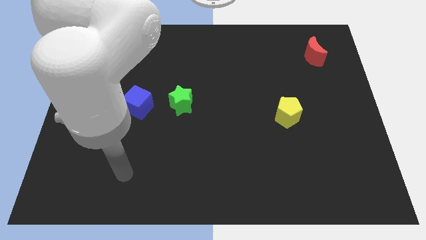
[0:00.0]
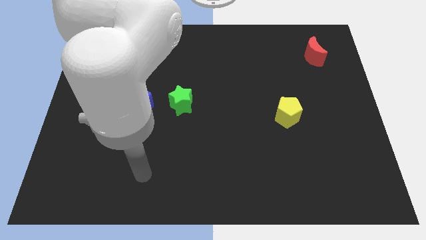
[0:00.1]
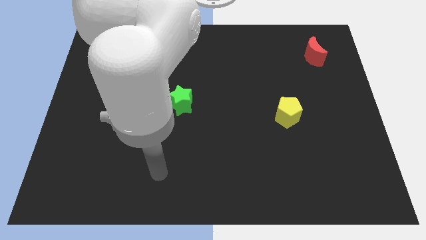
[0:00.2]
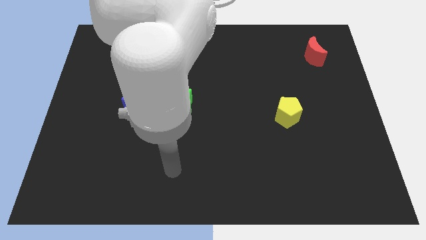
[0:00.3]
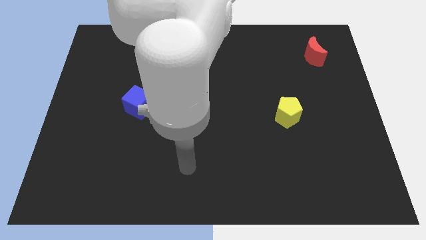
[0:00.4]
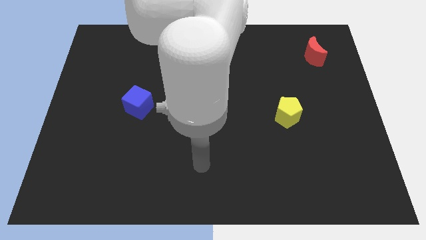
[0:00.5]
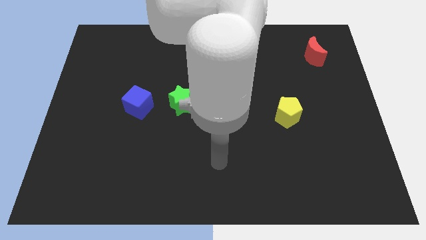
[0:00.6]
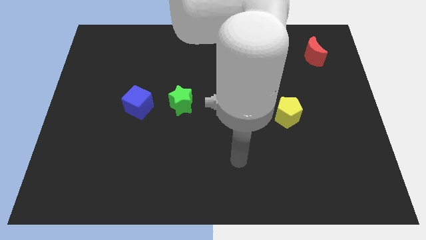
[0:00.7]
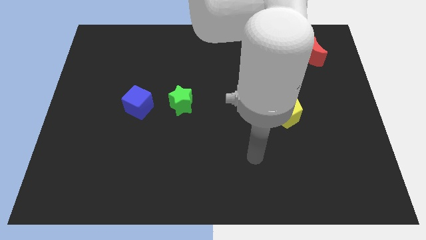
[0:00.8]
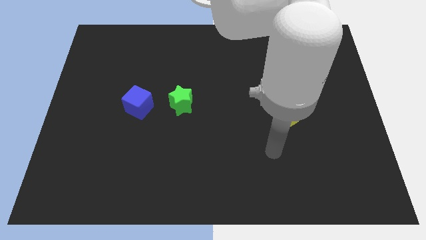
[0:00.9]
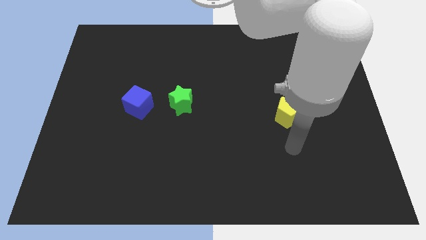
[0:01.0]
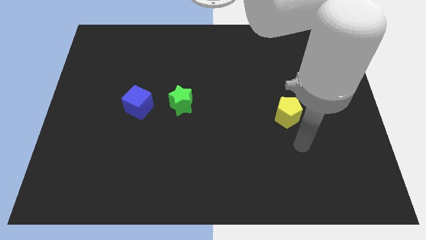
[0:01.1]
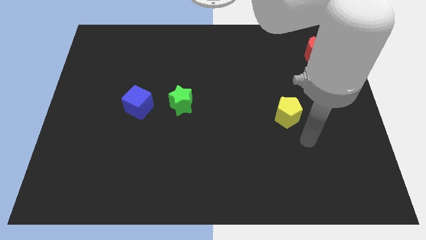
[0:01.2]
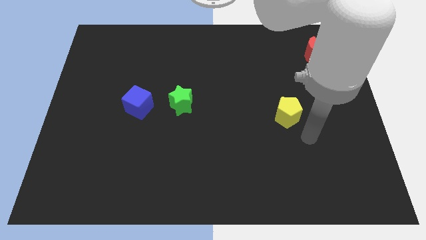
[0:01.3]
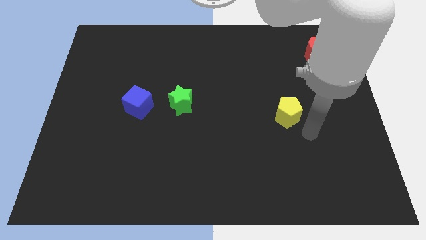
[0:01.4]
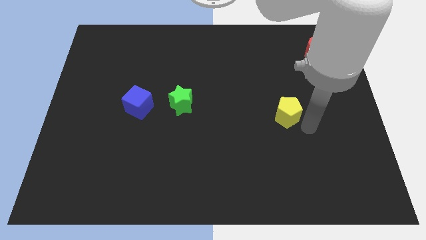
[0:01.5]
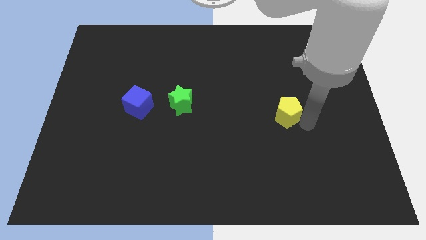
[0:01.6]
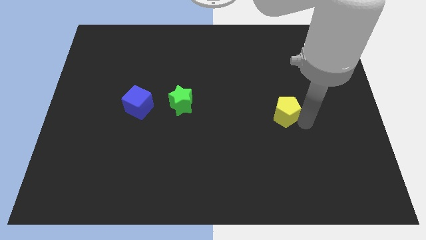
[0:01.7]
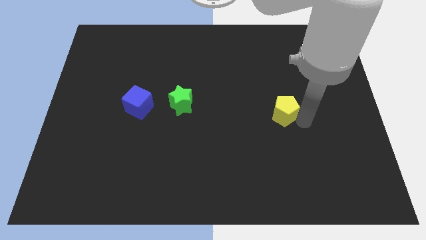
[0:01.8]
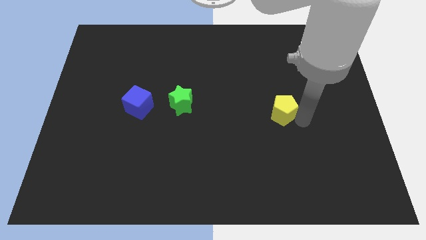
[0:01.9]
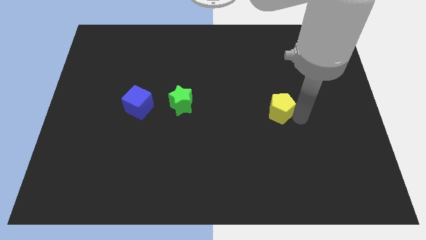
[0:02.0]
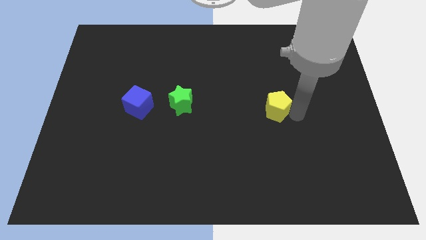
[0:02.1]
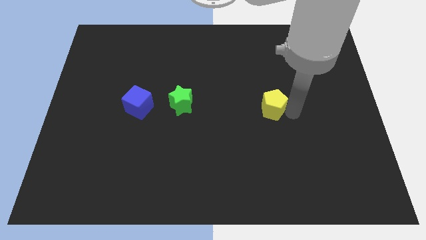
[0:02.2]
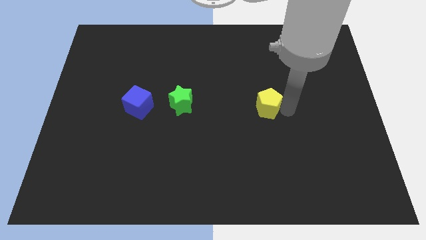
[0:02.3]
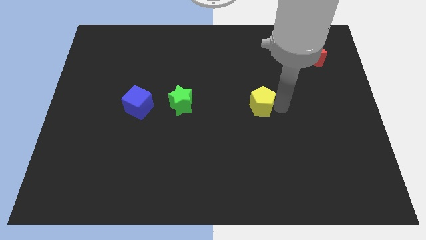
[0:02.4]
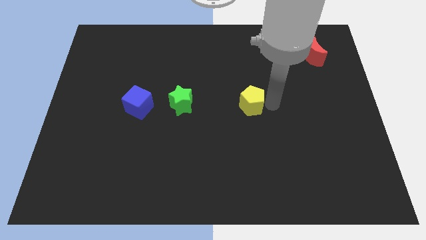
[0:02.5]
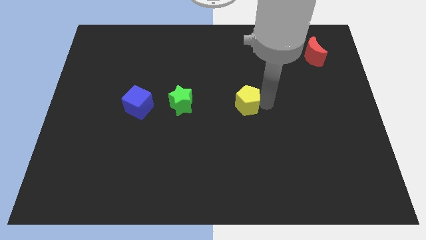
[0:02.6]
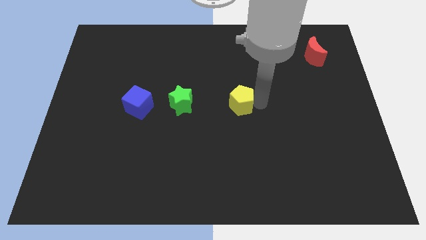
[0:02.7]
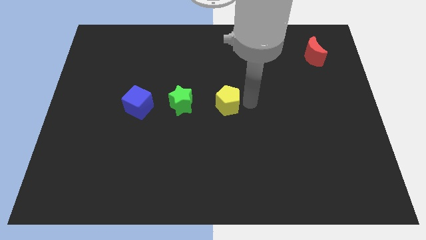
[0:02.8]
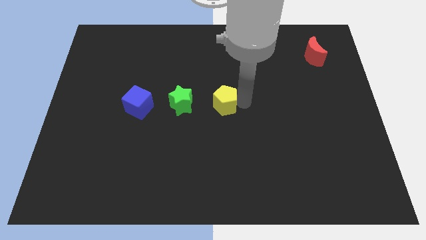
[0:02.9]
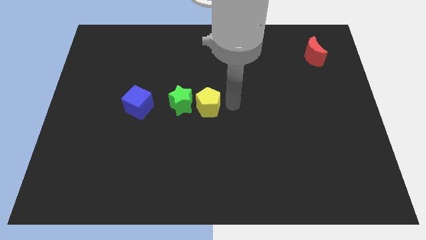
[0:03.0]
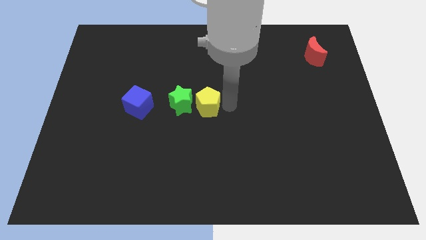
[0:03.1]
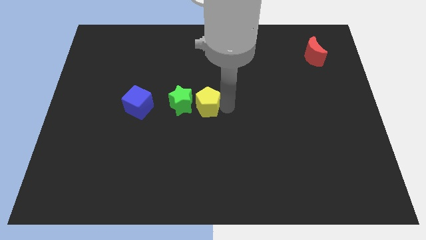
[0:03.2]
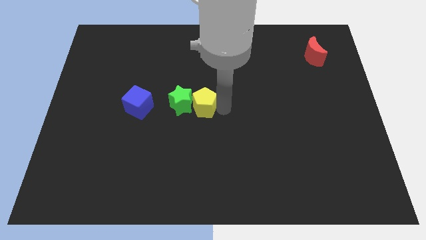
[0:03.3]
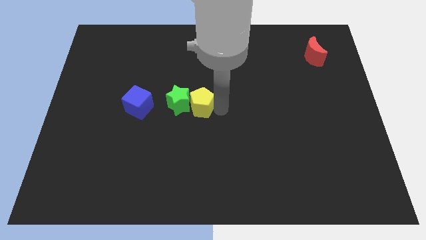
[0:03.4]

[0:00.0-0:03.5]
slide the yellow block to the star

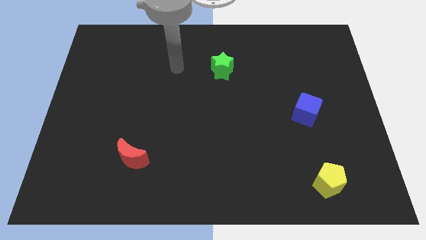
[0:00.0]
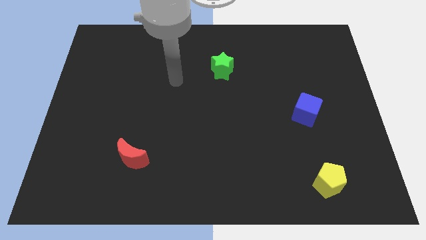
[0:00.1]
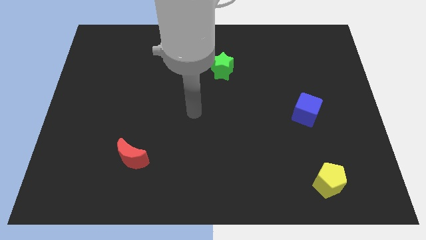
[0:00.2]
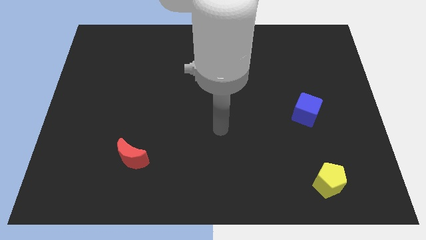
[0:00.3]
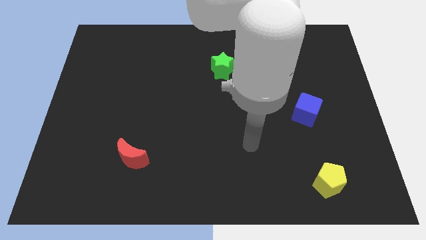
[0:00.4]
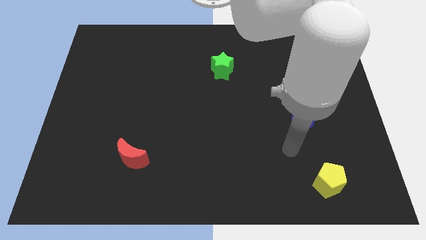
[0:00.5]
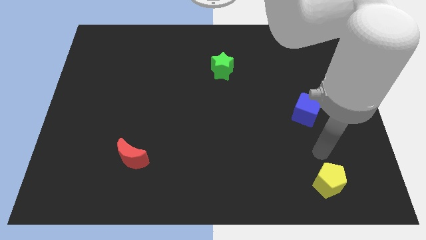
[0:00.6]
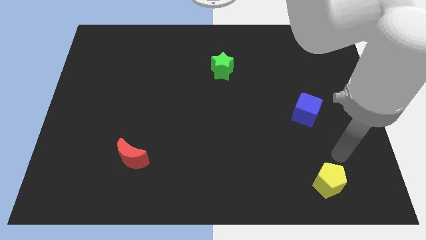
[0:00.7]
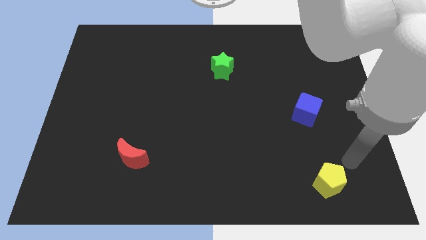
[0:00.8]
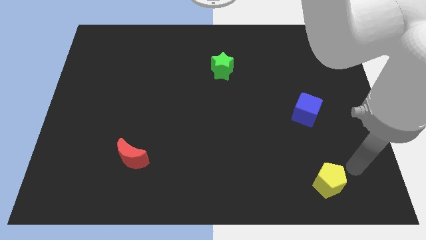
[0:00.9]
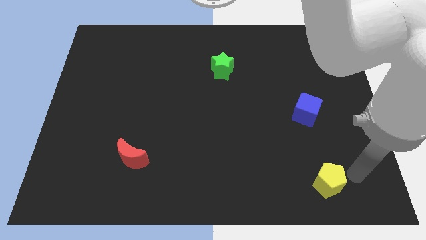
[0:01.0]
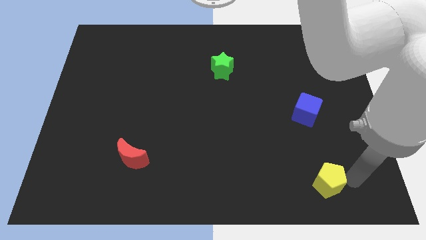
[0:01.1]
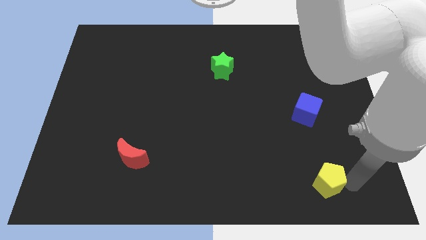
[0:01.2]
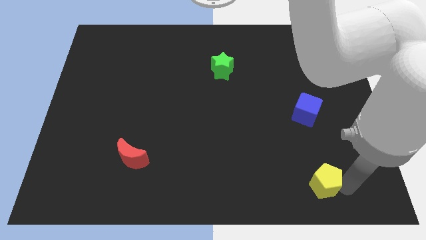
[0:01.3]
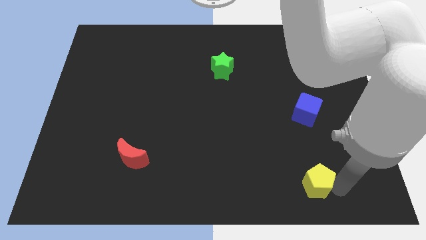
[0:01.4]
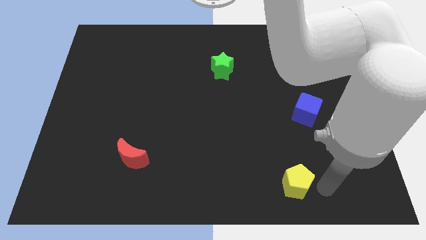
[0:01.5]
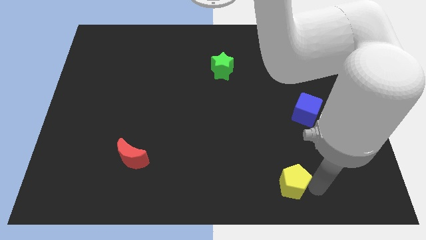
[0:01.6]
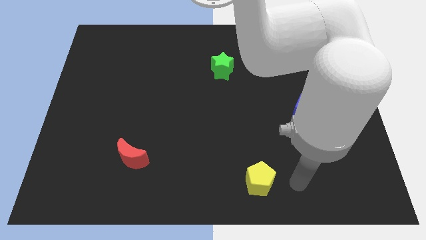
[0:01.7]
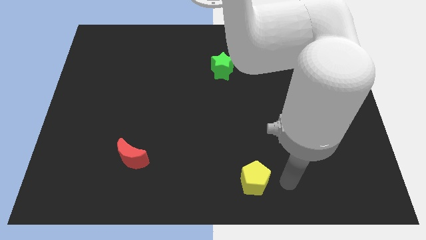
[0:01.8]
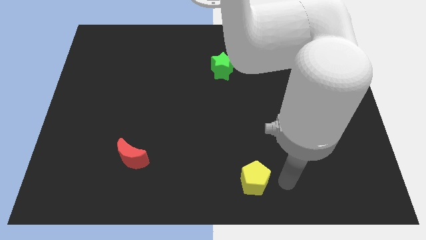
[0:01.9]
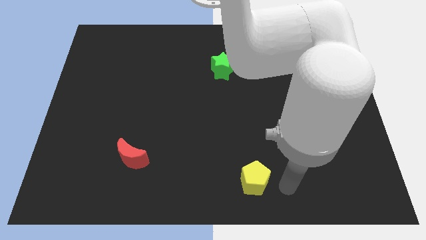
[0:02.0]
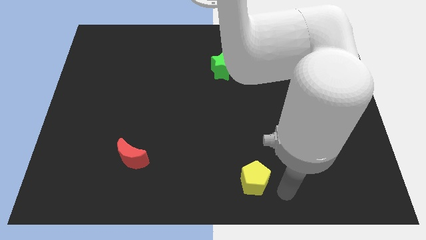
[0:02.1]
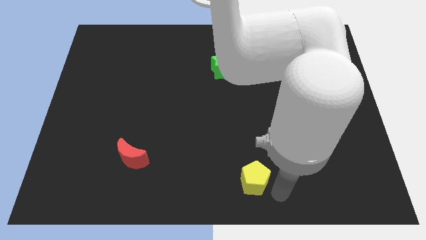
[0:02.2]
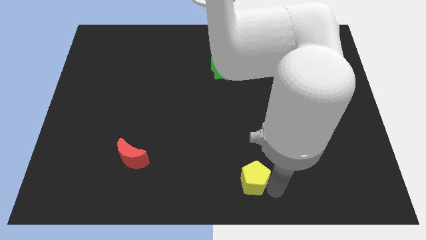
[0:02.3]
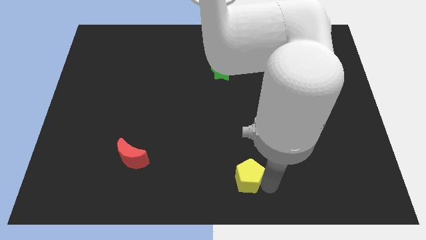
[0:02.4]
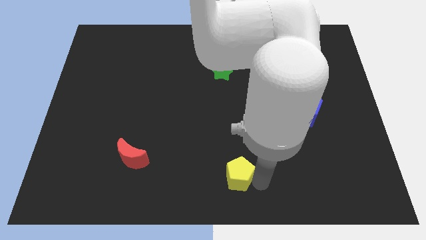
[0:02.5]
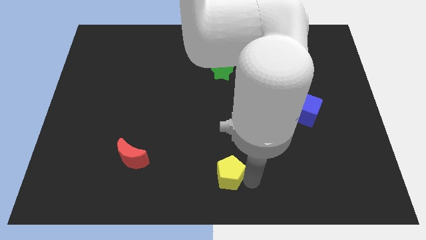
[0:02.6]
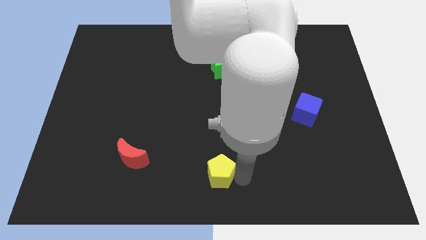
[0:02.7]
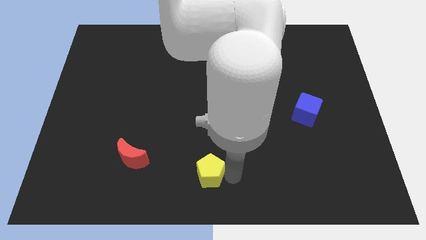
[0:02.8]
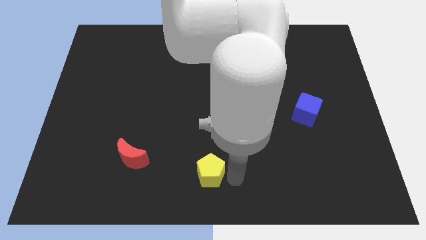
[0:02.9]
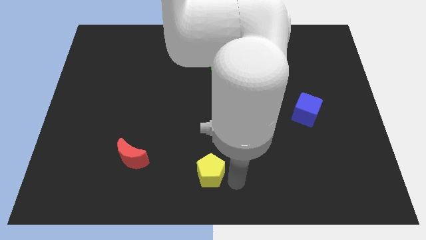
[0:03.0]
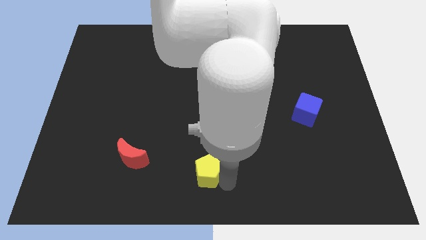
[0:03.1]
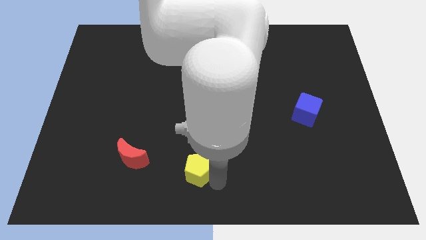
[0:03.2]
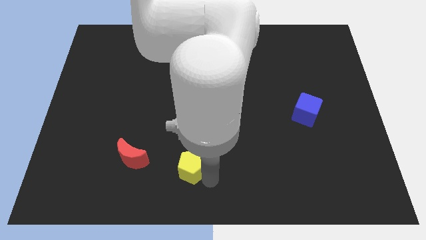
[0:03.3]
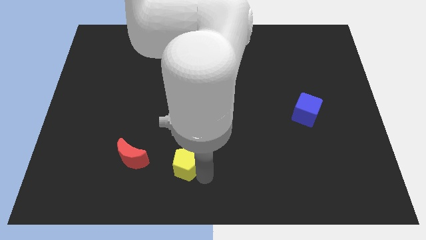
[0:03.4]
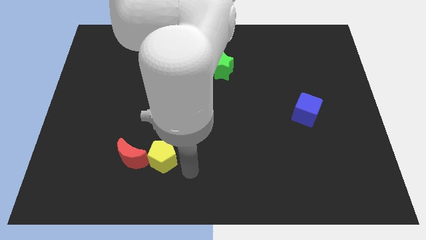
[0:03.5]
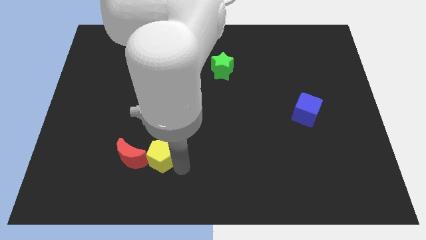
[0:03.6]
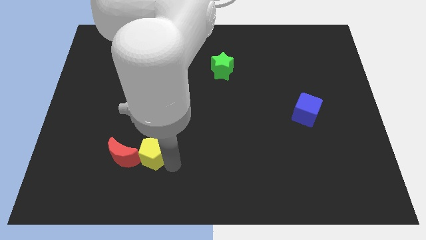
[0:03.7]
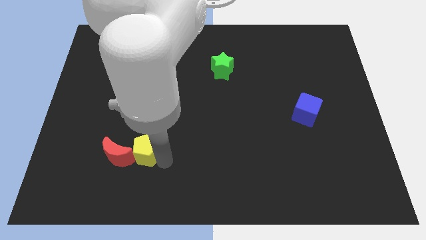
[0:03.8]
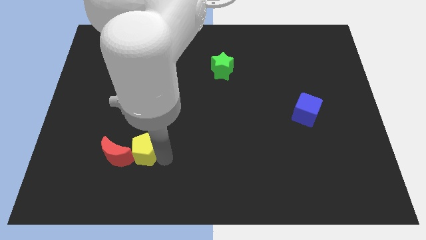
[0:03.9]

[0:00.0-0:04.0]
push the yellow block to the red moon

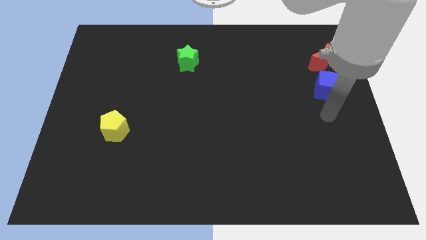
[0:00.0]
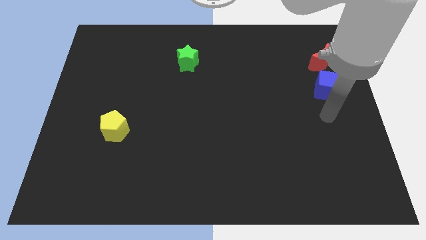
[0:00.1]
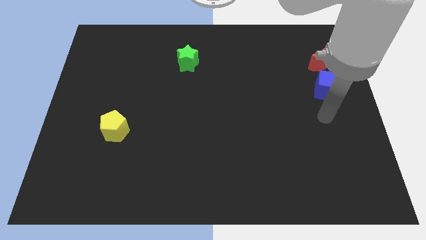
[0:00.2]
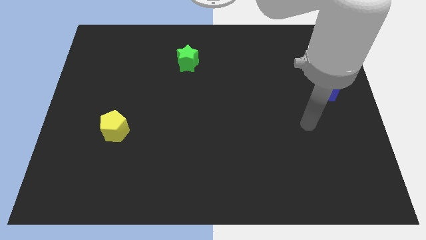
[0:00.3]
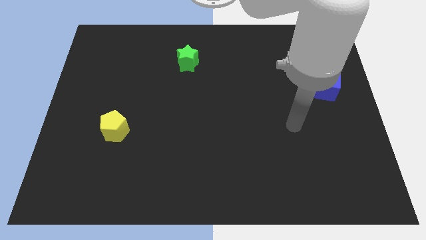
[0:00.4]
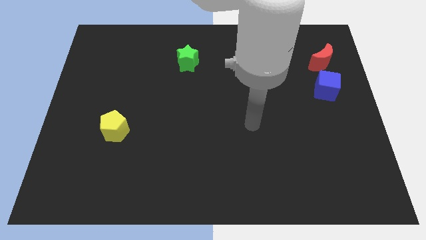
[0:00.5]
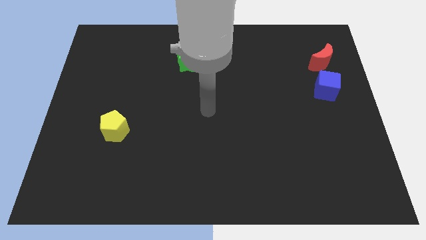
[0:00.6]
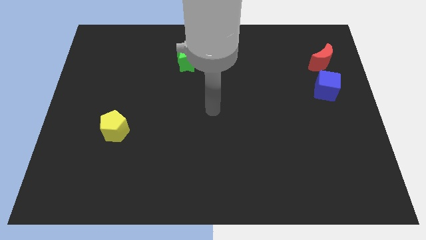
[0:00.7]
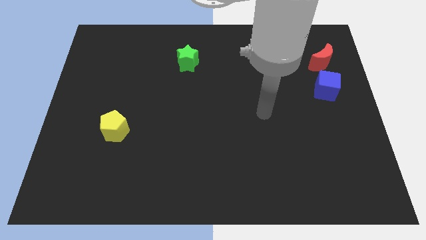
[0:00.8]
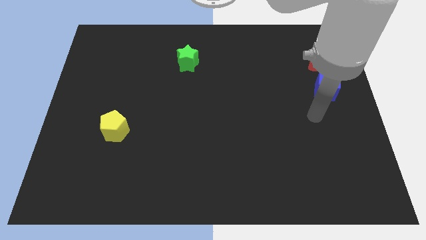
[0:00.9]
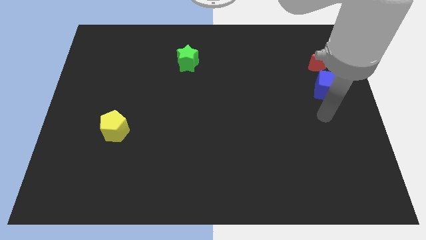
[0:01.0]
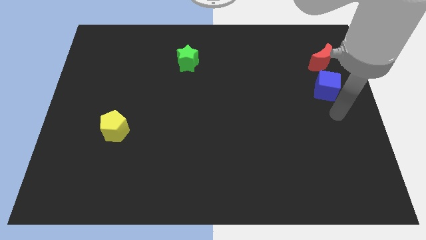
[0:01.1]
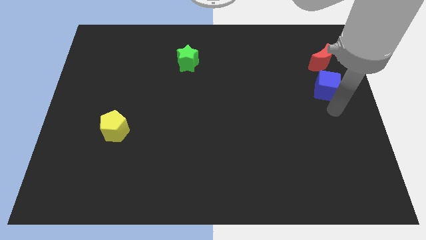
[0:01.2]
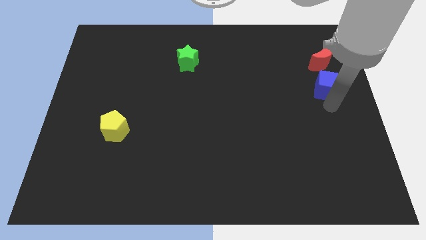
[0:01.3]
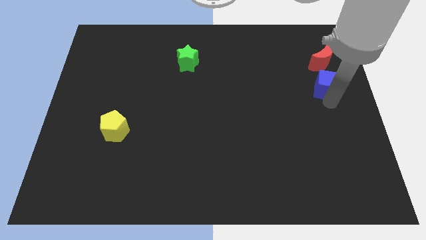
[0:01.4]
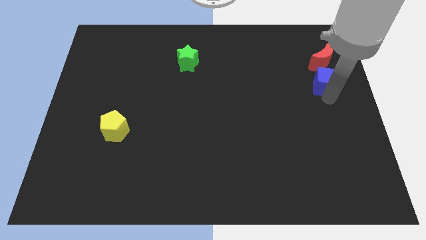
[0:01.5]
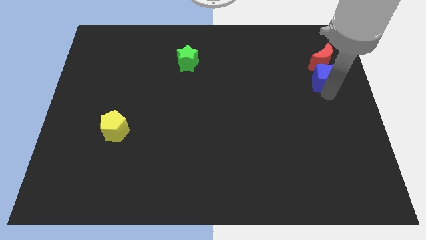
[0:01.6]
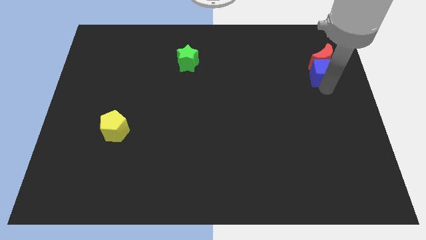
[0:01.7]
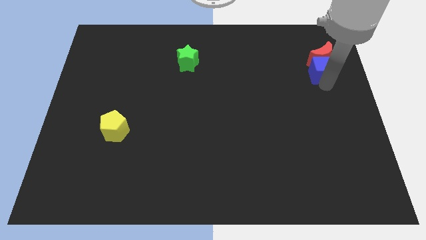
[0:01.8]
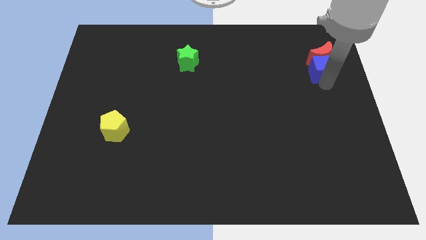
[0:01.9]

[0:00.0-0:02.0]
move the blue cube next to the red block
